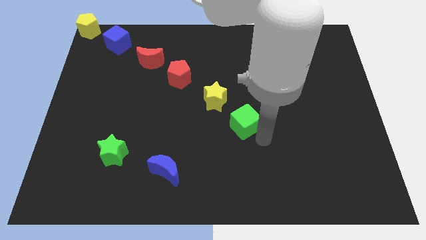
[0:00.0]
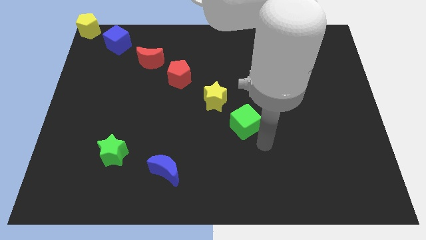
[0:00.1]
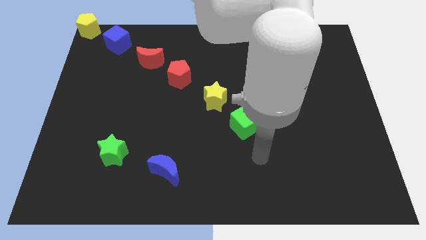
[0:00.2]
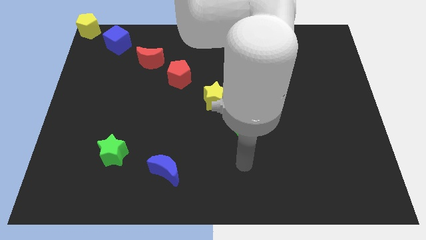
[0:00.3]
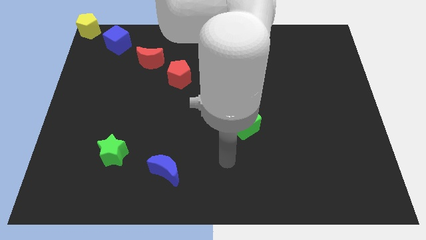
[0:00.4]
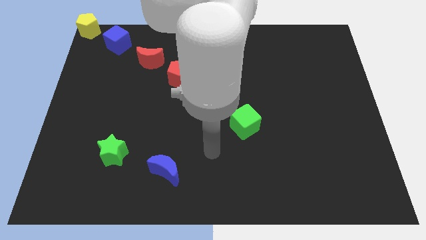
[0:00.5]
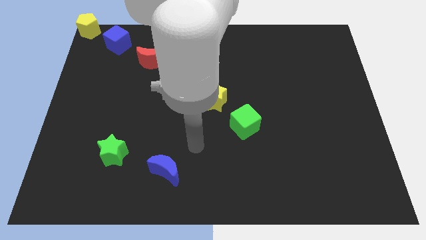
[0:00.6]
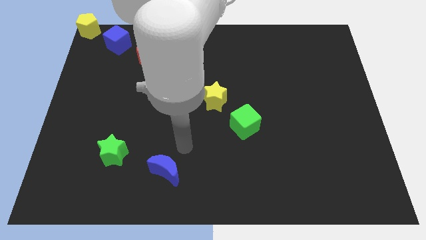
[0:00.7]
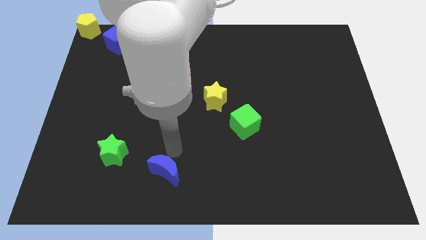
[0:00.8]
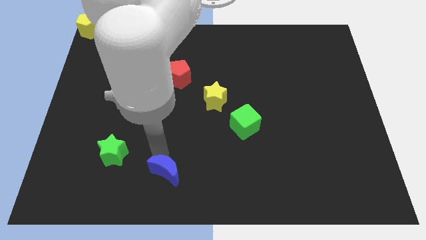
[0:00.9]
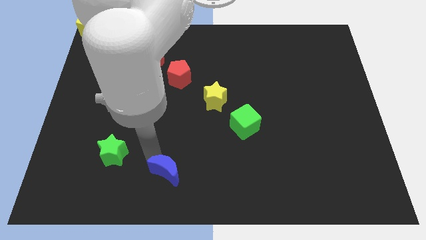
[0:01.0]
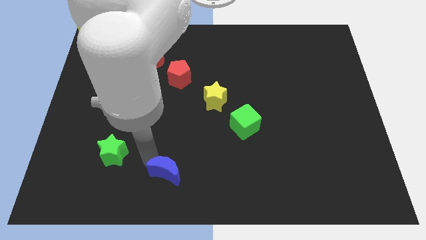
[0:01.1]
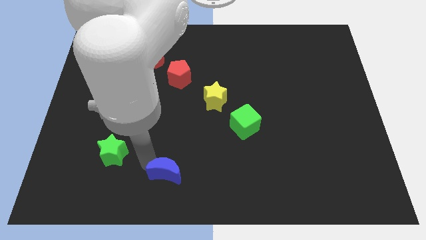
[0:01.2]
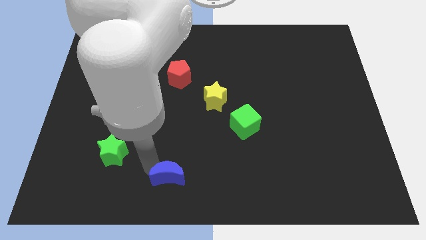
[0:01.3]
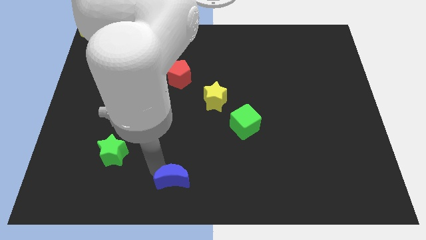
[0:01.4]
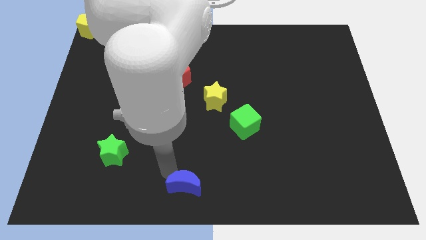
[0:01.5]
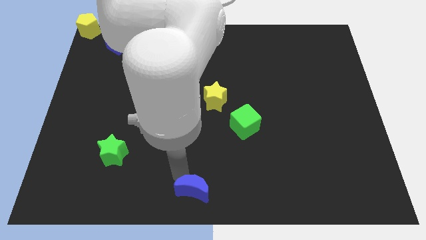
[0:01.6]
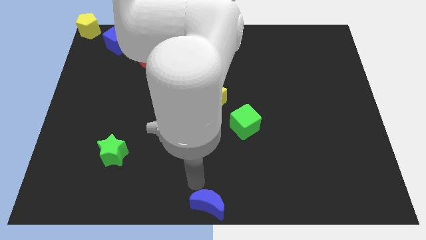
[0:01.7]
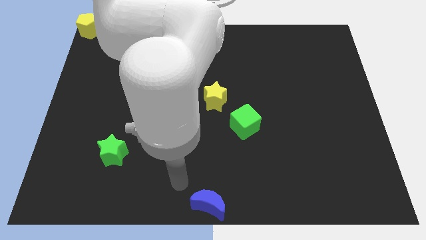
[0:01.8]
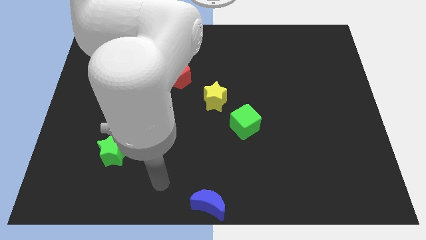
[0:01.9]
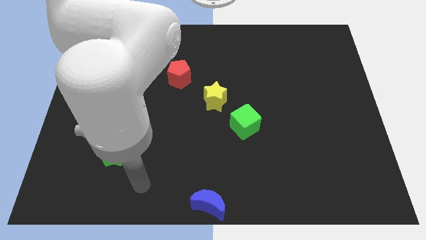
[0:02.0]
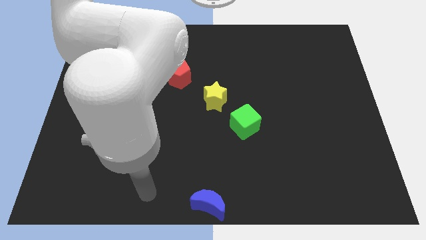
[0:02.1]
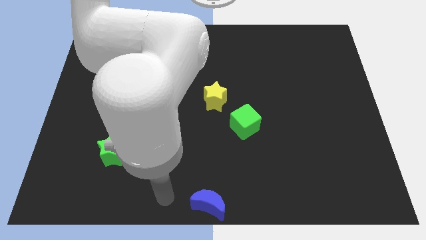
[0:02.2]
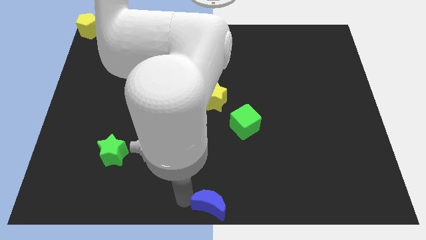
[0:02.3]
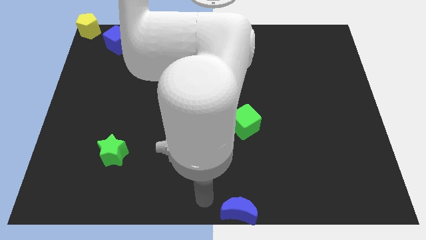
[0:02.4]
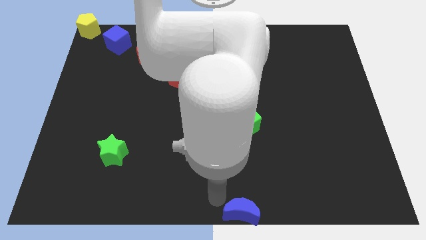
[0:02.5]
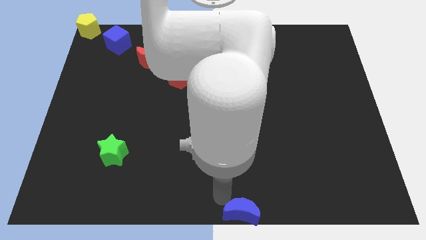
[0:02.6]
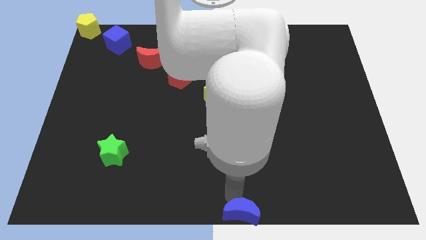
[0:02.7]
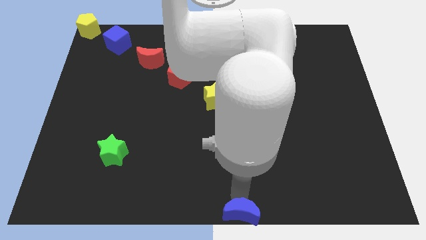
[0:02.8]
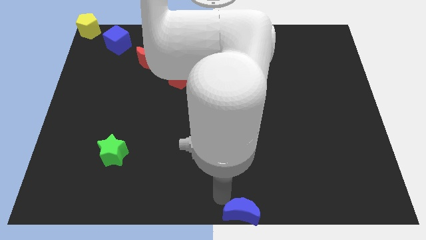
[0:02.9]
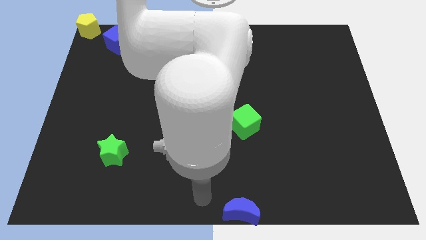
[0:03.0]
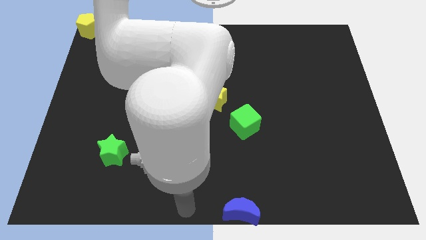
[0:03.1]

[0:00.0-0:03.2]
slide blue moon below the green cube vertically

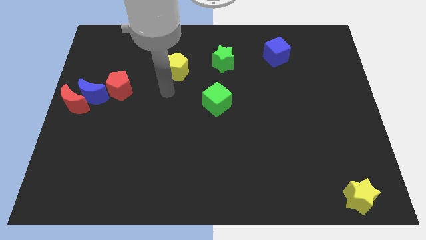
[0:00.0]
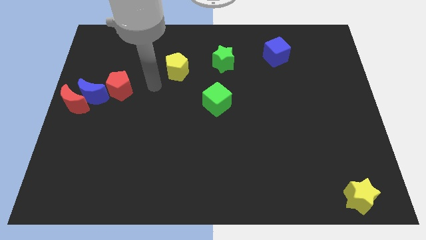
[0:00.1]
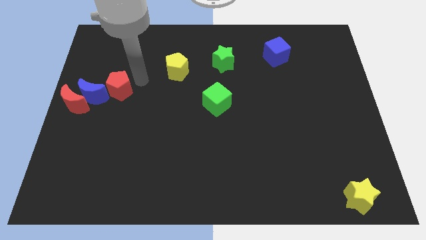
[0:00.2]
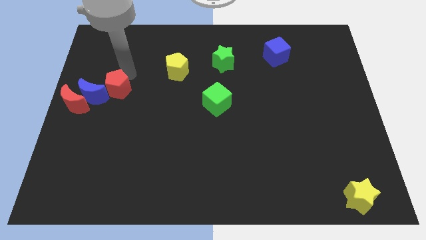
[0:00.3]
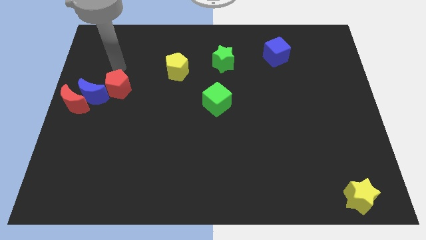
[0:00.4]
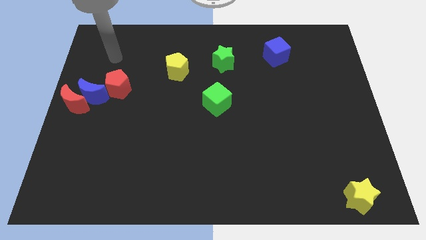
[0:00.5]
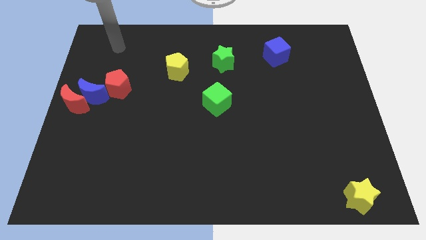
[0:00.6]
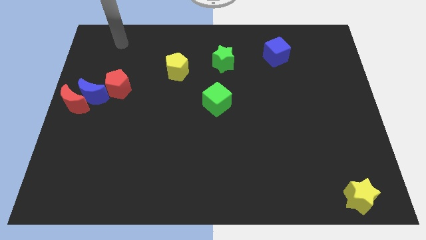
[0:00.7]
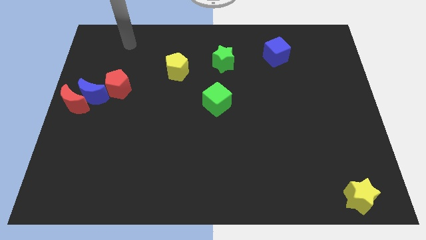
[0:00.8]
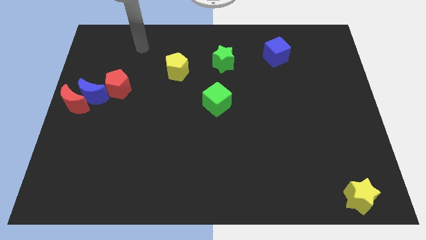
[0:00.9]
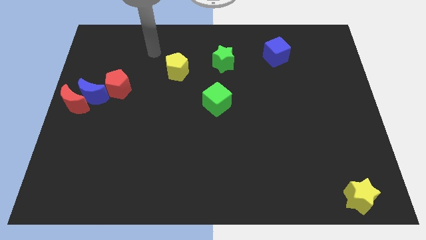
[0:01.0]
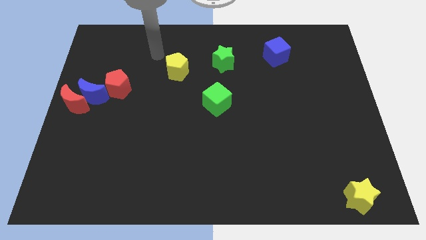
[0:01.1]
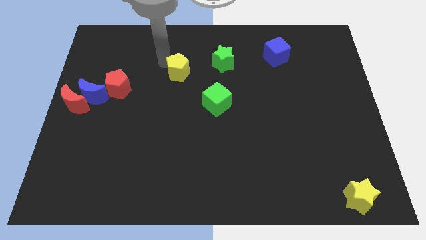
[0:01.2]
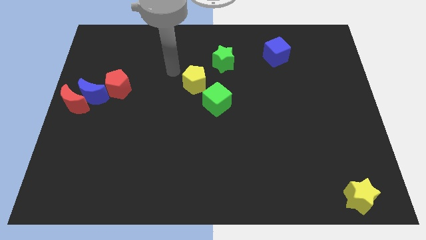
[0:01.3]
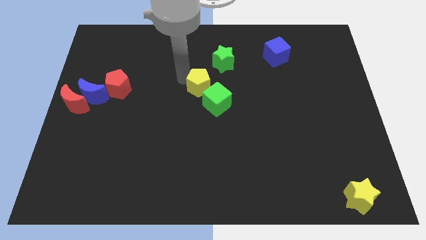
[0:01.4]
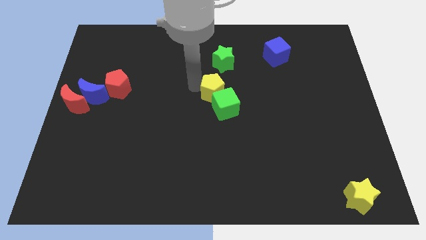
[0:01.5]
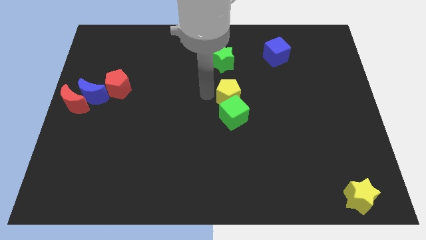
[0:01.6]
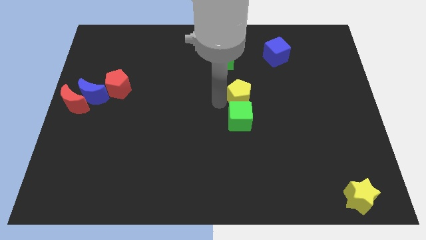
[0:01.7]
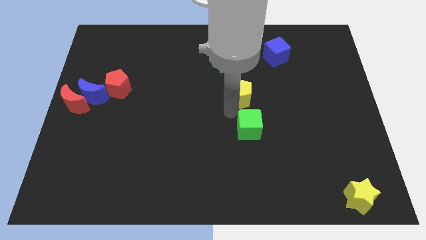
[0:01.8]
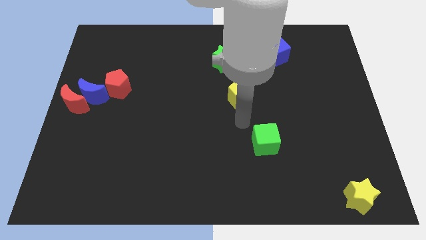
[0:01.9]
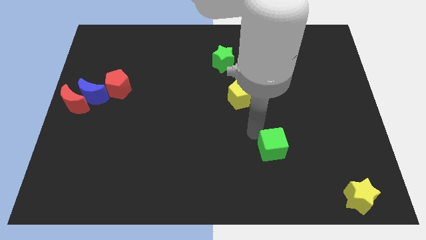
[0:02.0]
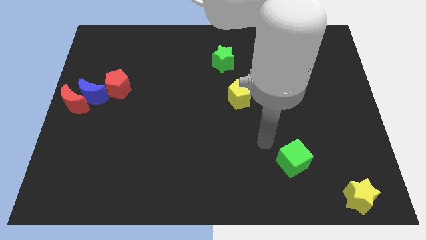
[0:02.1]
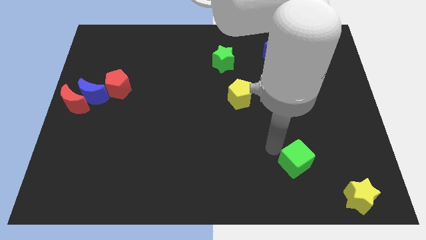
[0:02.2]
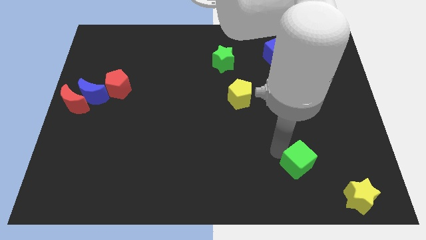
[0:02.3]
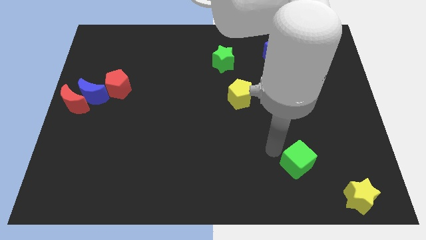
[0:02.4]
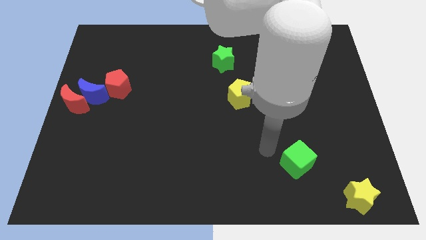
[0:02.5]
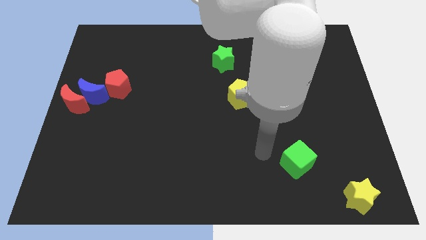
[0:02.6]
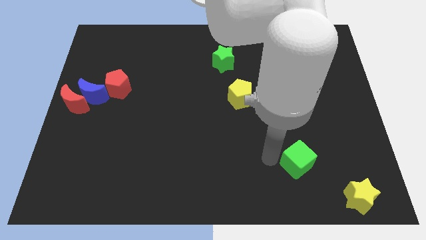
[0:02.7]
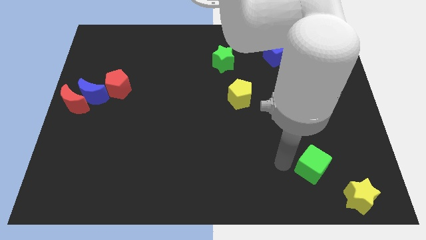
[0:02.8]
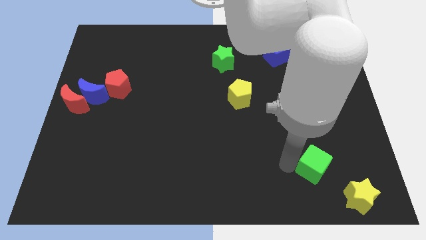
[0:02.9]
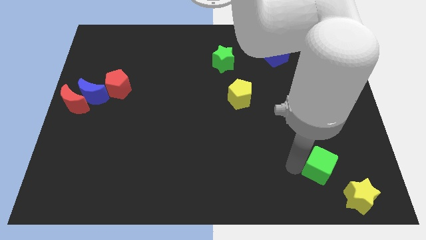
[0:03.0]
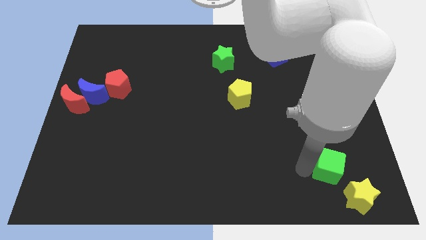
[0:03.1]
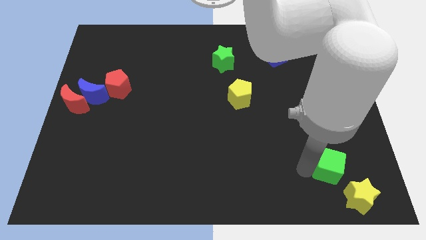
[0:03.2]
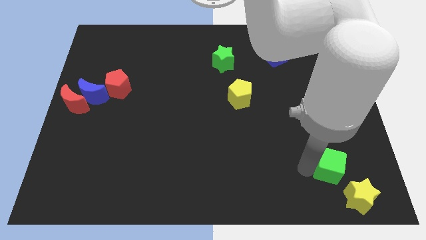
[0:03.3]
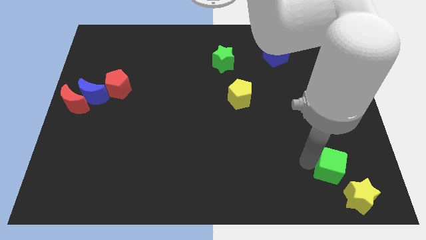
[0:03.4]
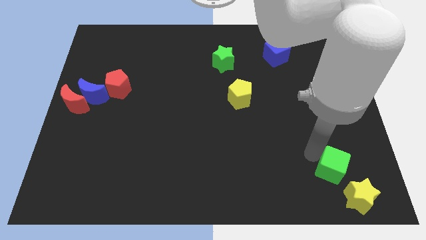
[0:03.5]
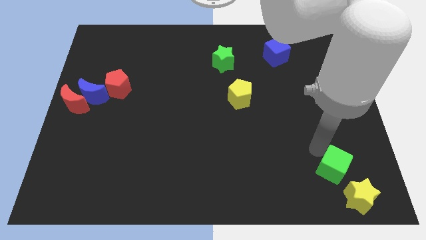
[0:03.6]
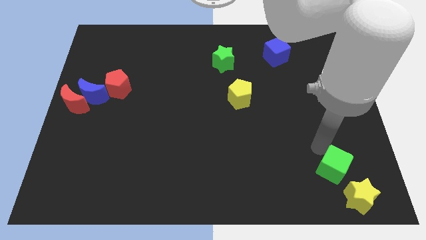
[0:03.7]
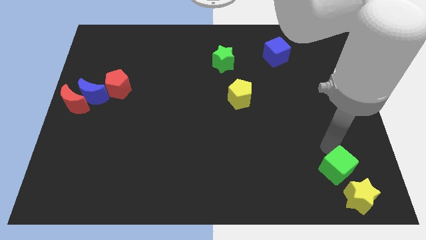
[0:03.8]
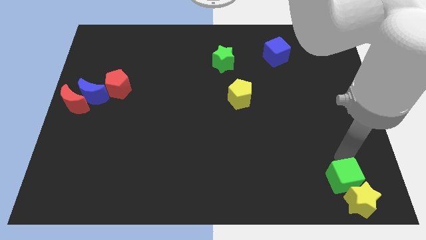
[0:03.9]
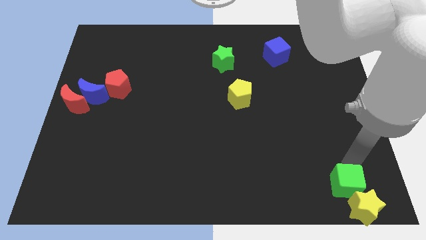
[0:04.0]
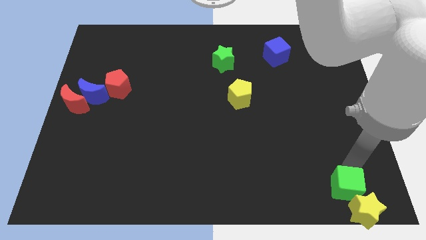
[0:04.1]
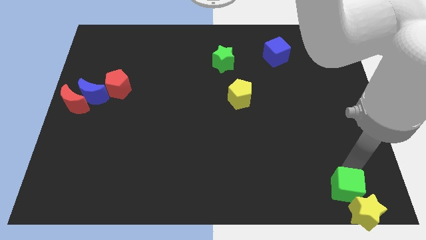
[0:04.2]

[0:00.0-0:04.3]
push the green cube into the yellow star

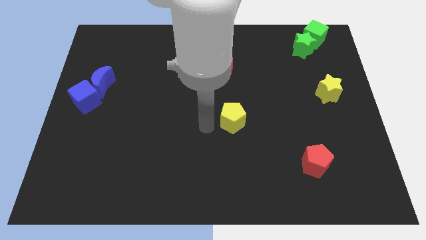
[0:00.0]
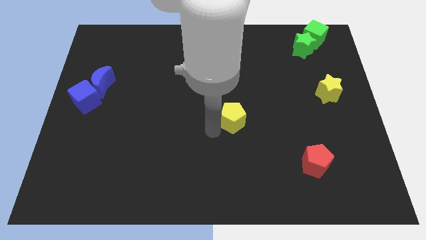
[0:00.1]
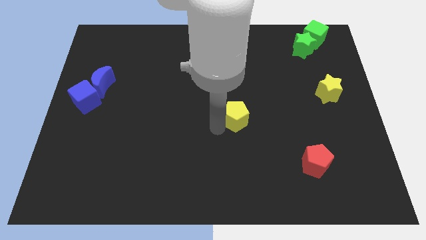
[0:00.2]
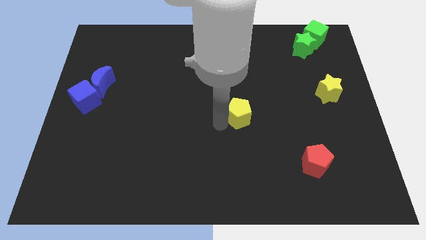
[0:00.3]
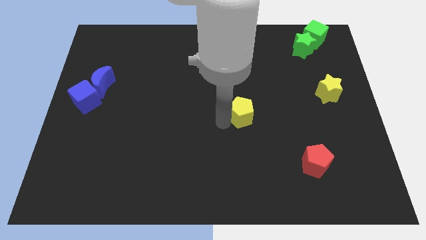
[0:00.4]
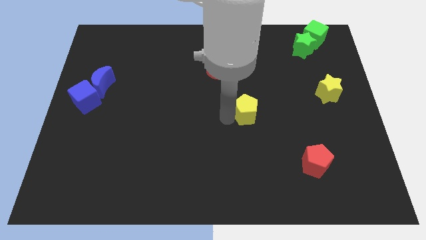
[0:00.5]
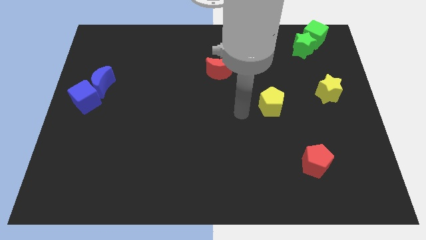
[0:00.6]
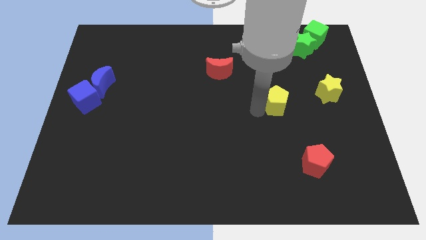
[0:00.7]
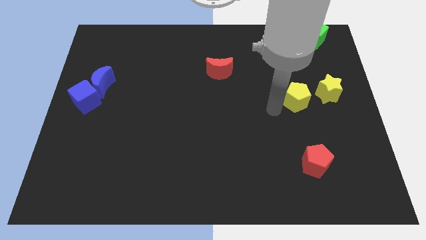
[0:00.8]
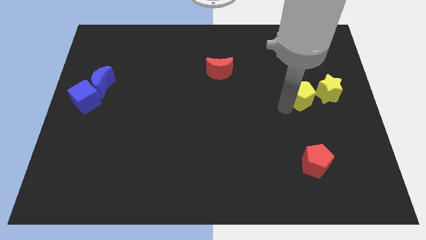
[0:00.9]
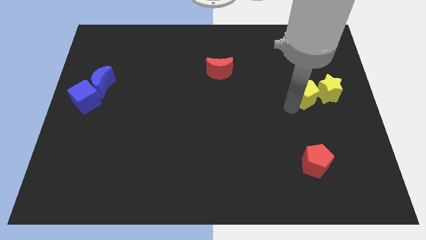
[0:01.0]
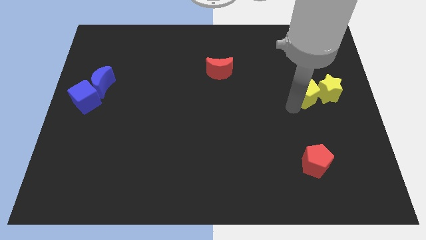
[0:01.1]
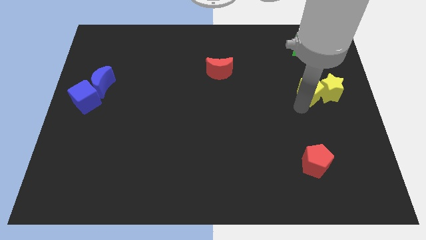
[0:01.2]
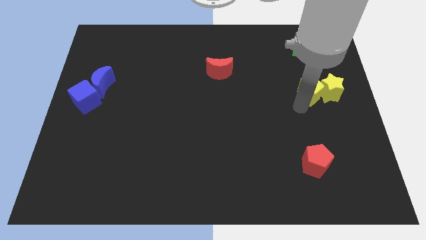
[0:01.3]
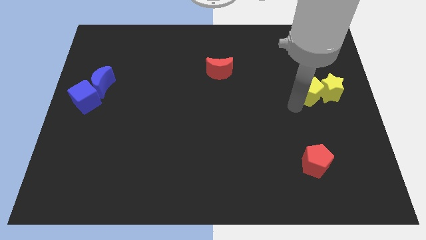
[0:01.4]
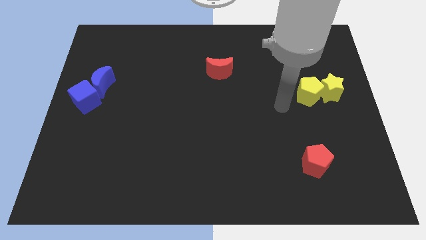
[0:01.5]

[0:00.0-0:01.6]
push the yellow pentagon towards the left side of the yellow star
